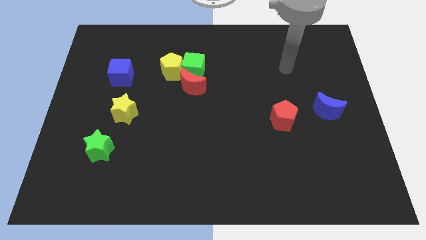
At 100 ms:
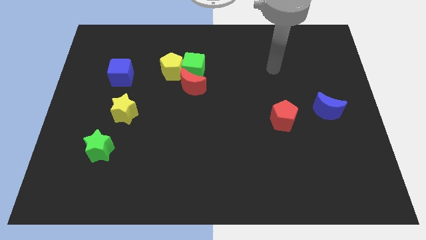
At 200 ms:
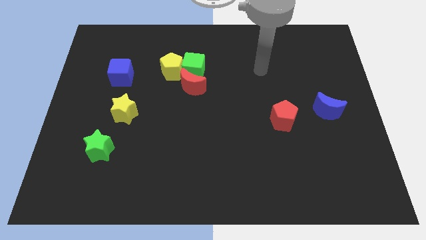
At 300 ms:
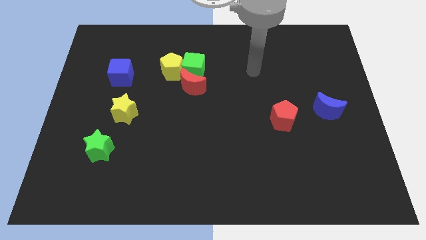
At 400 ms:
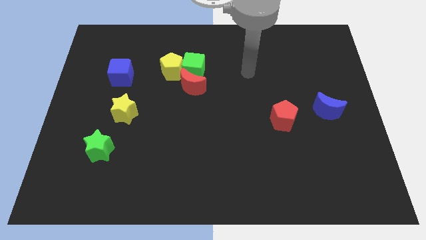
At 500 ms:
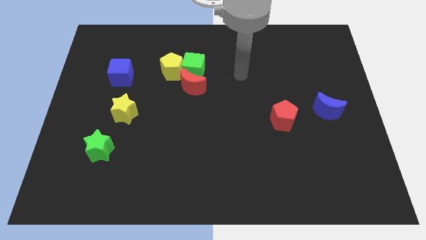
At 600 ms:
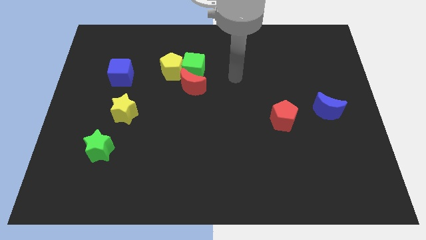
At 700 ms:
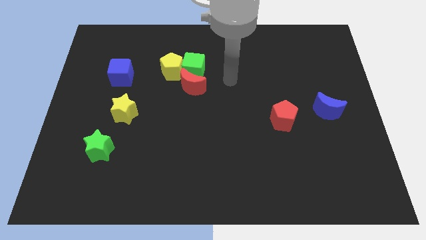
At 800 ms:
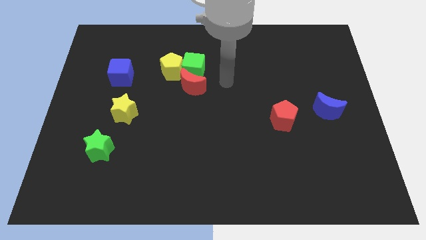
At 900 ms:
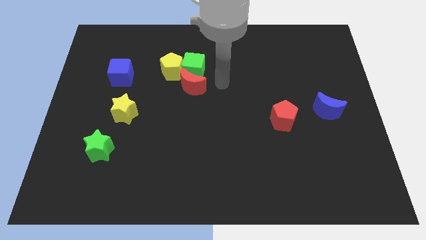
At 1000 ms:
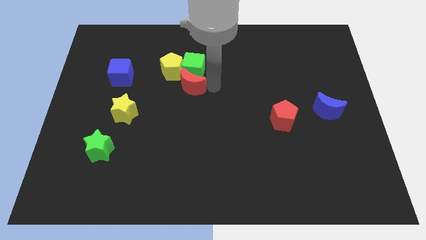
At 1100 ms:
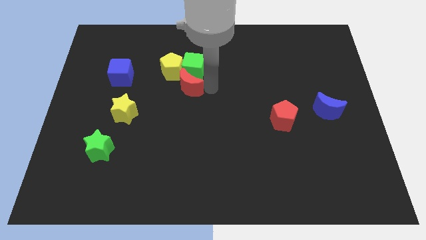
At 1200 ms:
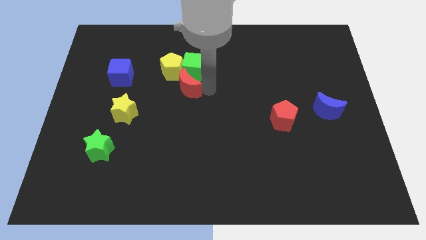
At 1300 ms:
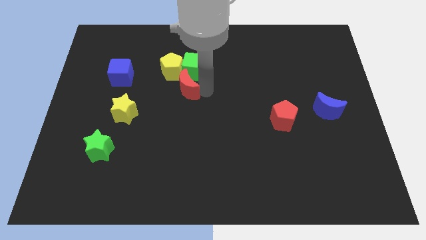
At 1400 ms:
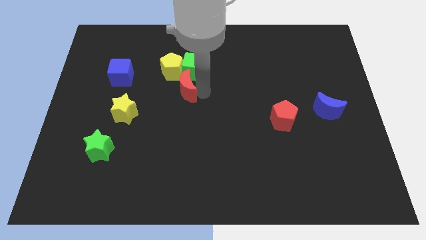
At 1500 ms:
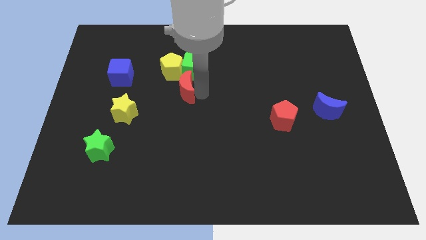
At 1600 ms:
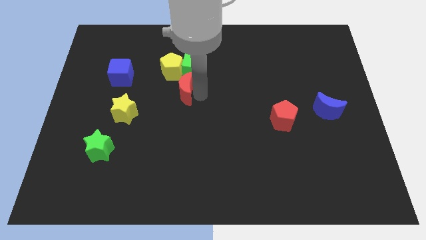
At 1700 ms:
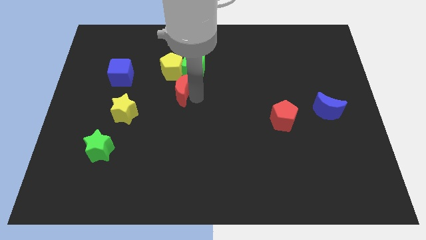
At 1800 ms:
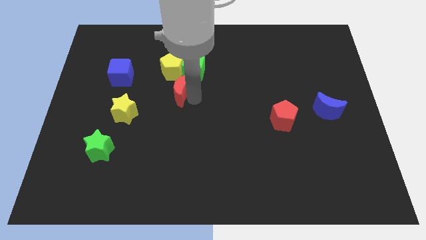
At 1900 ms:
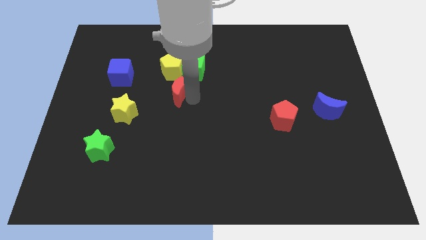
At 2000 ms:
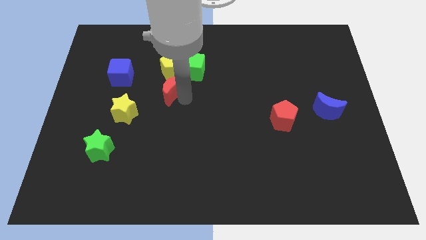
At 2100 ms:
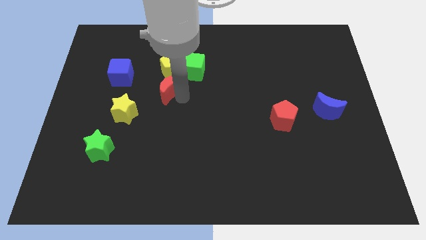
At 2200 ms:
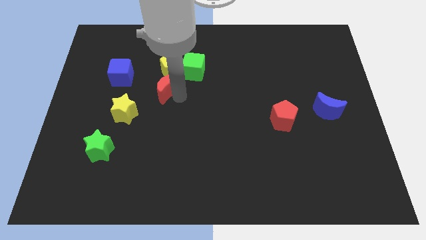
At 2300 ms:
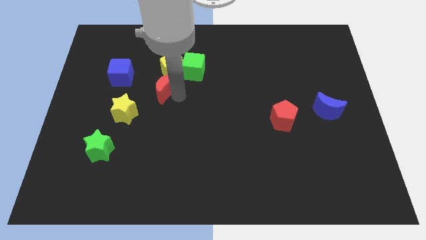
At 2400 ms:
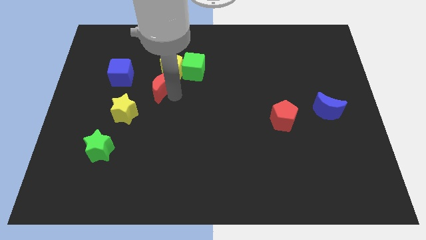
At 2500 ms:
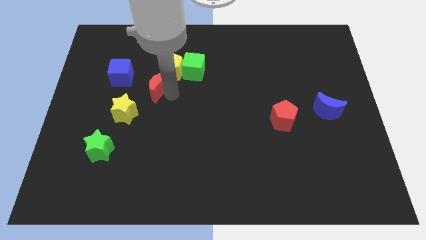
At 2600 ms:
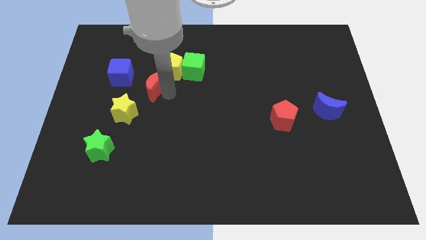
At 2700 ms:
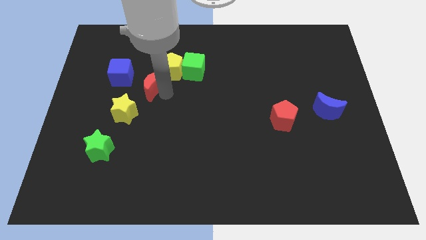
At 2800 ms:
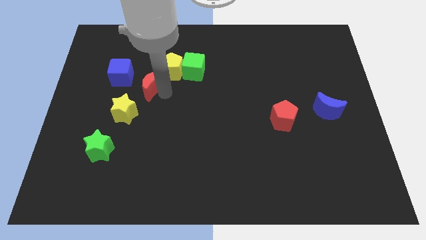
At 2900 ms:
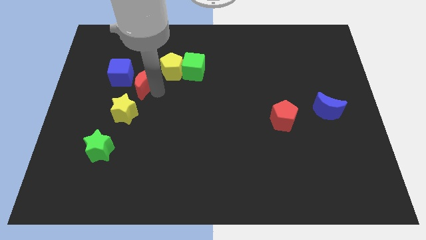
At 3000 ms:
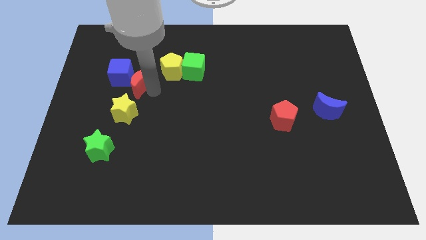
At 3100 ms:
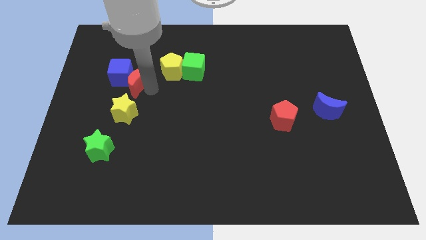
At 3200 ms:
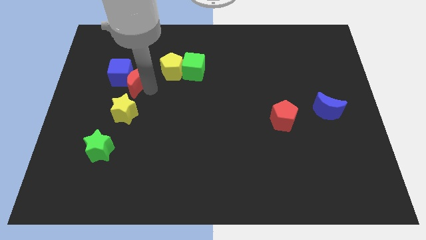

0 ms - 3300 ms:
slide the red moon to the blue cube

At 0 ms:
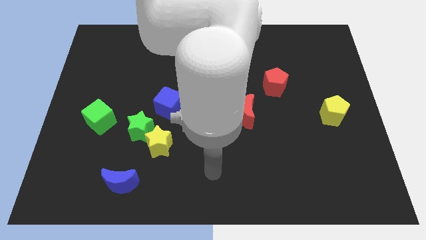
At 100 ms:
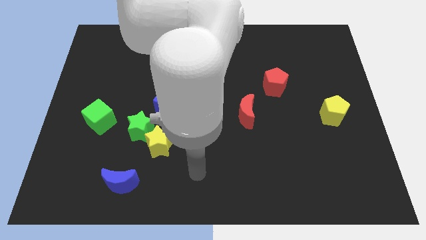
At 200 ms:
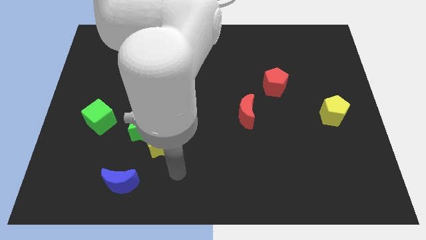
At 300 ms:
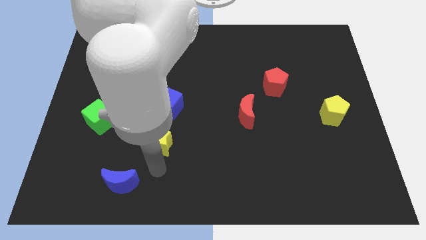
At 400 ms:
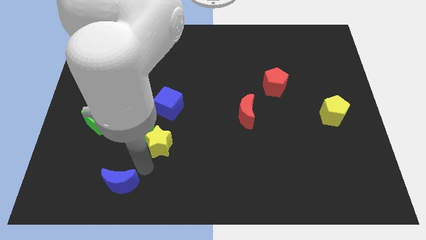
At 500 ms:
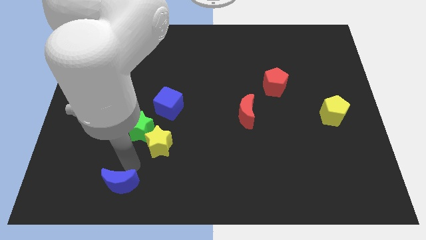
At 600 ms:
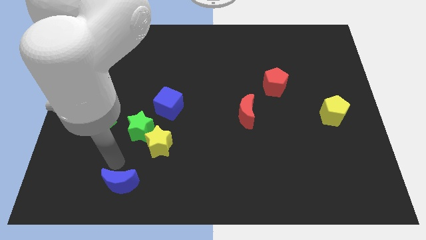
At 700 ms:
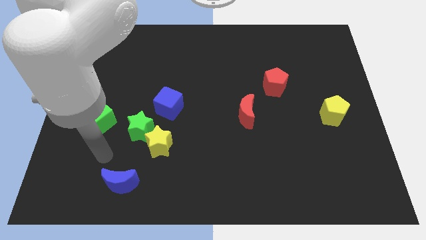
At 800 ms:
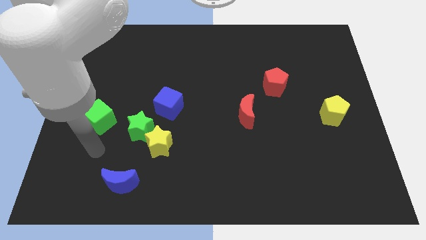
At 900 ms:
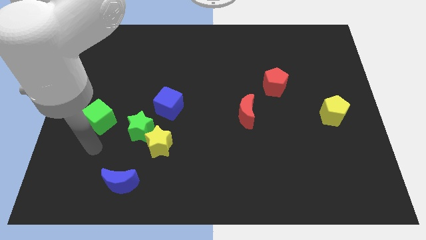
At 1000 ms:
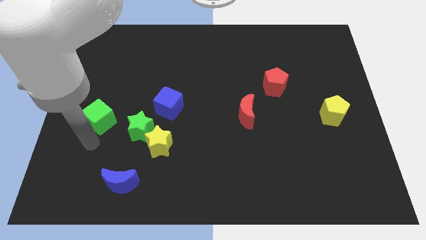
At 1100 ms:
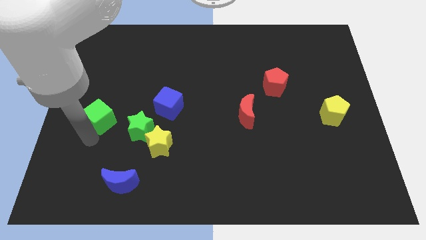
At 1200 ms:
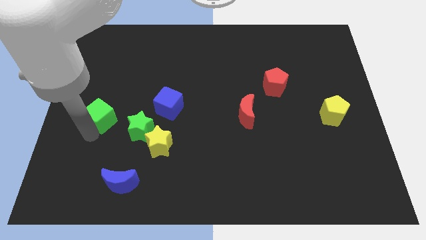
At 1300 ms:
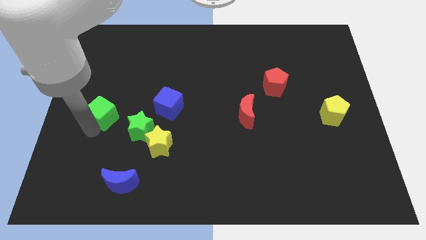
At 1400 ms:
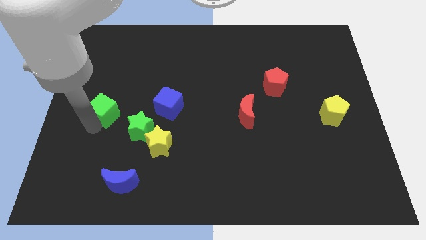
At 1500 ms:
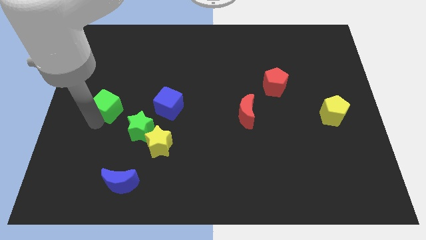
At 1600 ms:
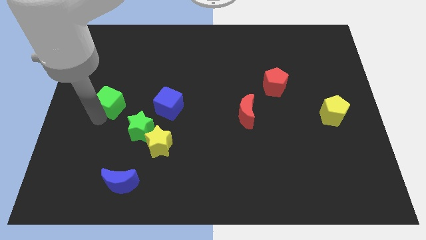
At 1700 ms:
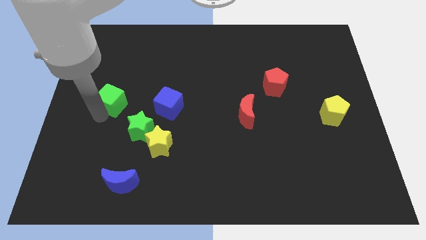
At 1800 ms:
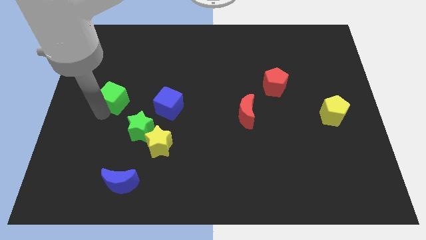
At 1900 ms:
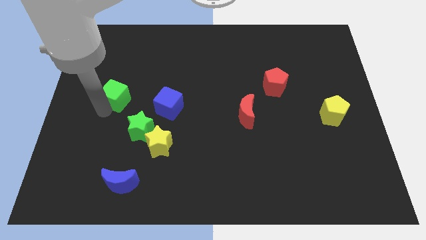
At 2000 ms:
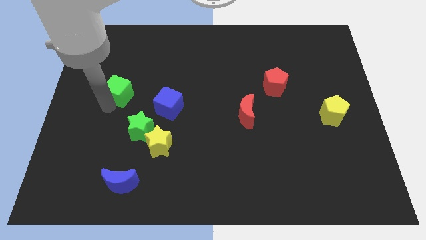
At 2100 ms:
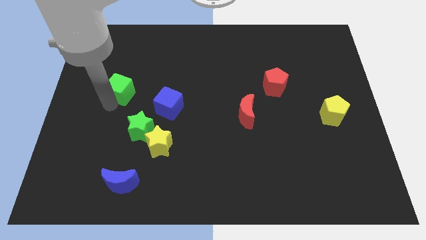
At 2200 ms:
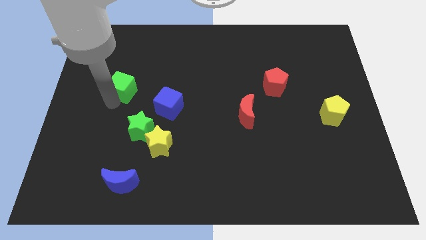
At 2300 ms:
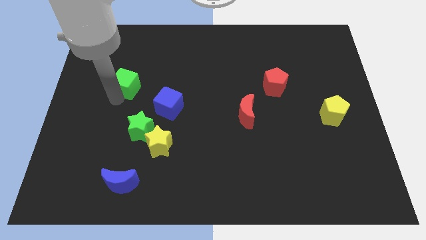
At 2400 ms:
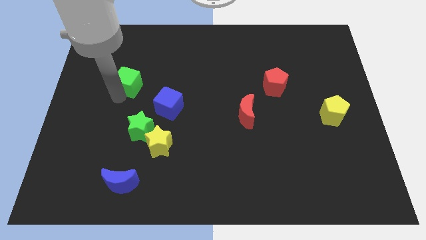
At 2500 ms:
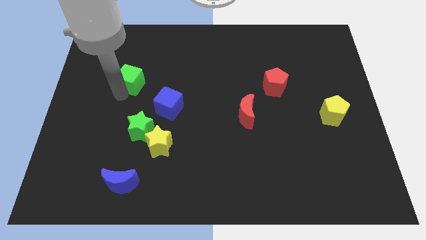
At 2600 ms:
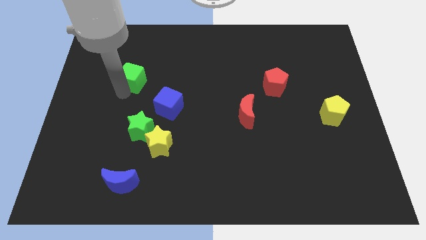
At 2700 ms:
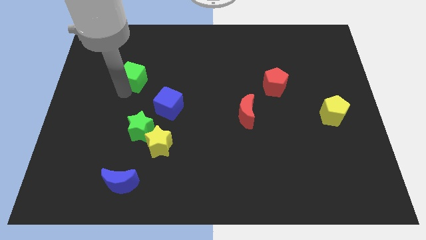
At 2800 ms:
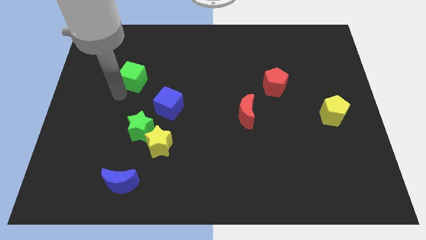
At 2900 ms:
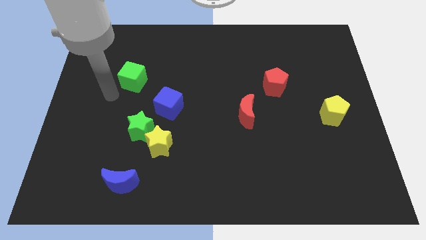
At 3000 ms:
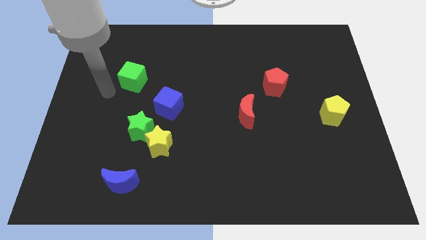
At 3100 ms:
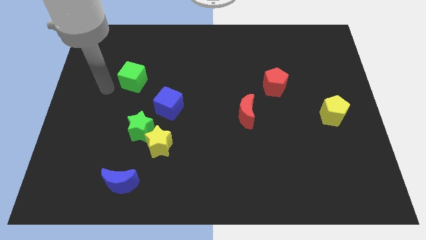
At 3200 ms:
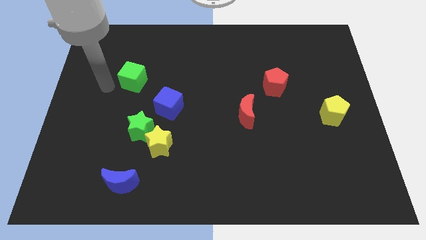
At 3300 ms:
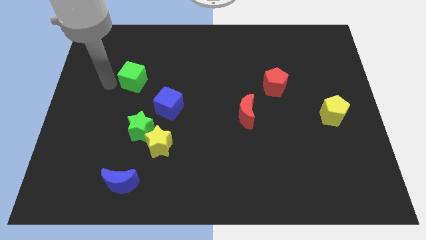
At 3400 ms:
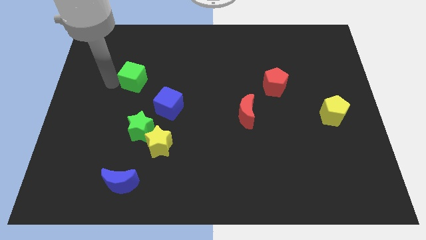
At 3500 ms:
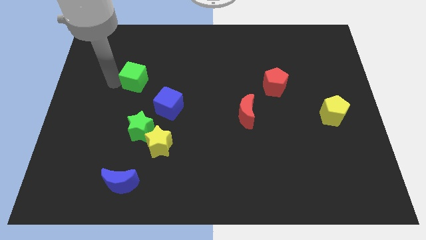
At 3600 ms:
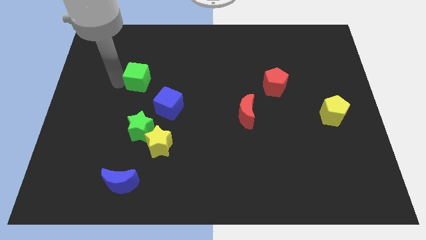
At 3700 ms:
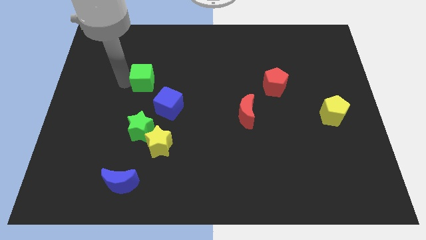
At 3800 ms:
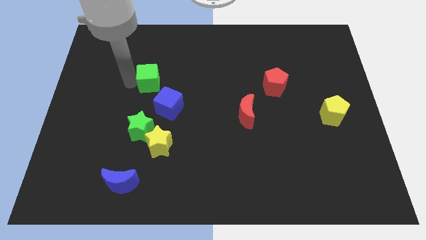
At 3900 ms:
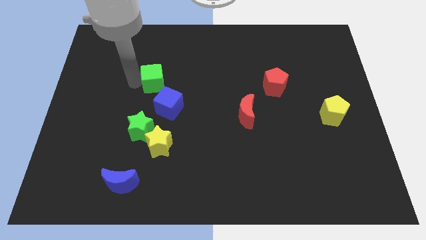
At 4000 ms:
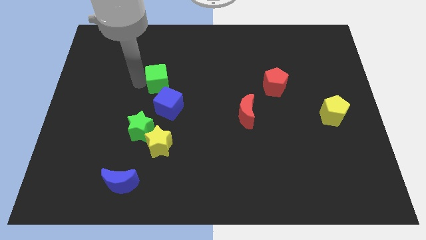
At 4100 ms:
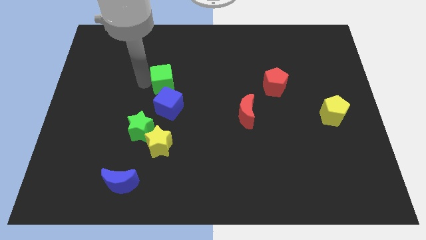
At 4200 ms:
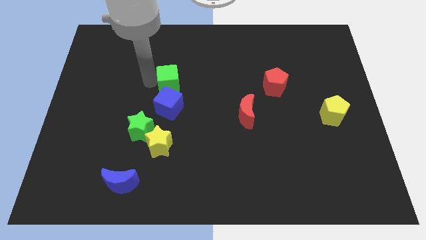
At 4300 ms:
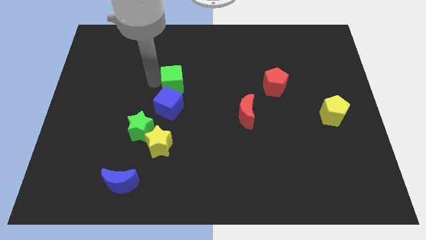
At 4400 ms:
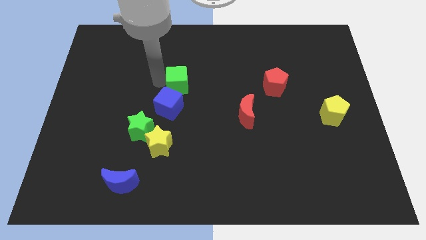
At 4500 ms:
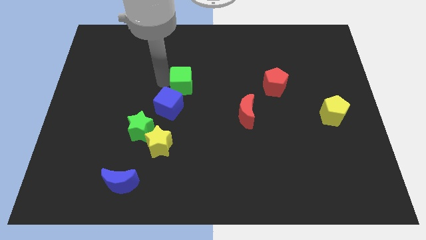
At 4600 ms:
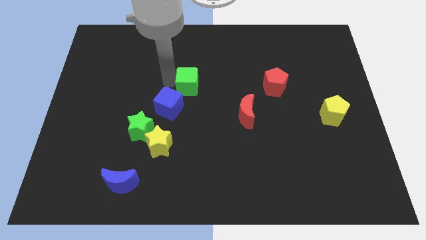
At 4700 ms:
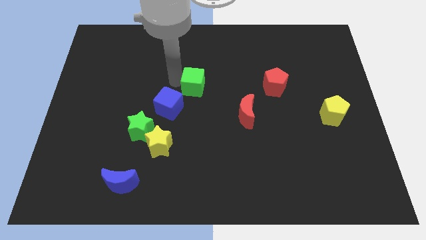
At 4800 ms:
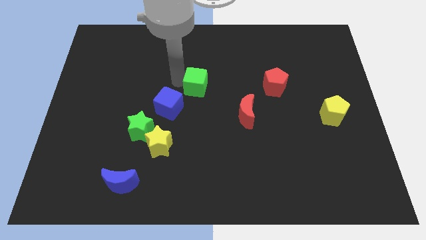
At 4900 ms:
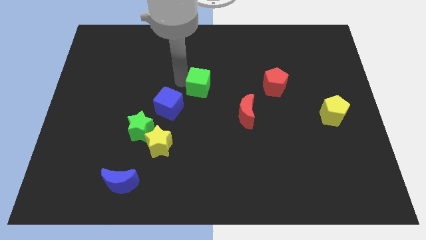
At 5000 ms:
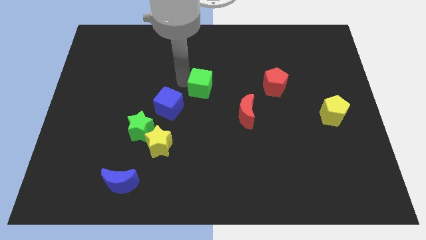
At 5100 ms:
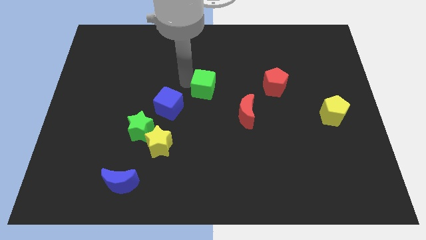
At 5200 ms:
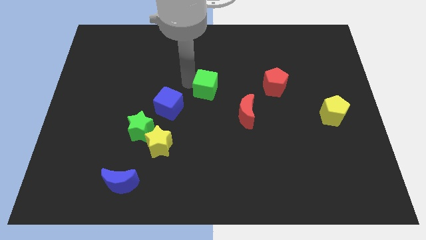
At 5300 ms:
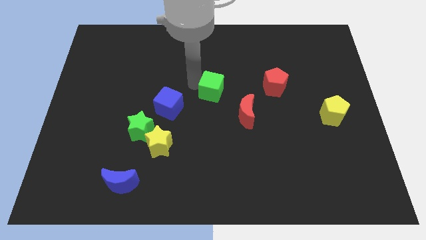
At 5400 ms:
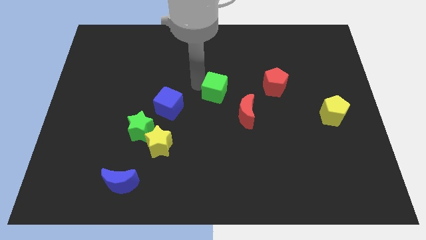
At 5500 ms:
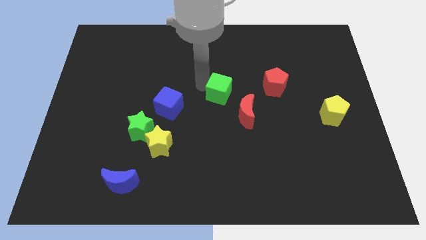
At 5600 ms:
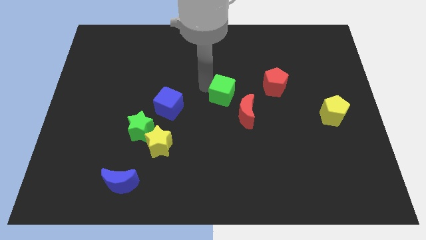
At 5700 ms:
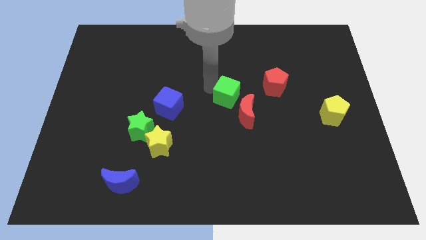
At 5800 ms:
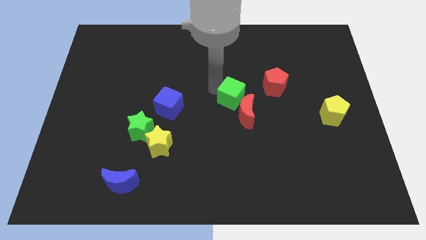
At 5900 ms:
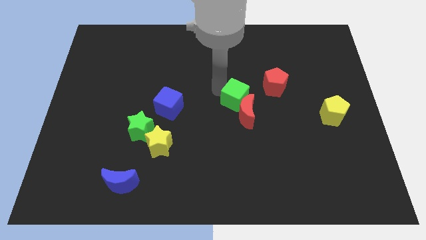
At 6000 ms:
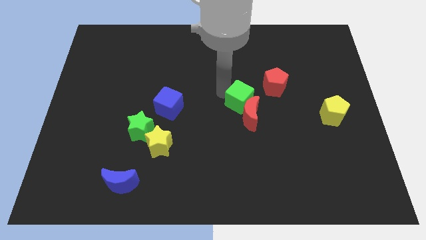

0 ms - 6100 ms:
slide the green cube towards the red moon
